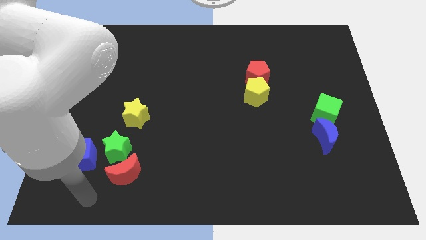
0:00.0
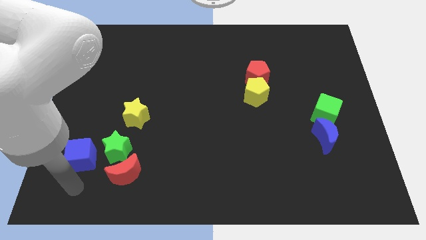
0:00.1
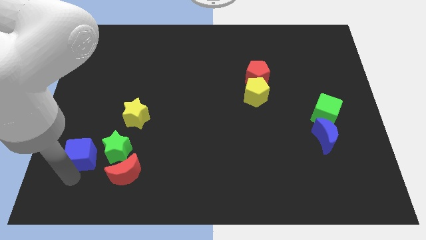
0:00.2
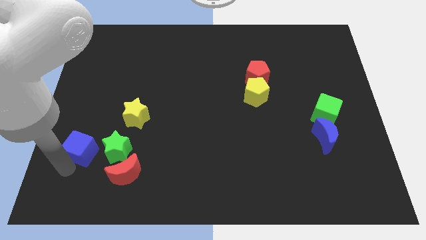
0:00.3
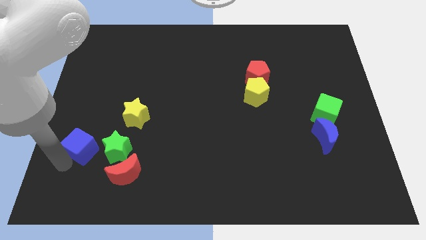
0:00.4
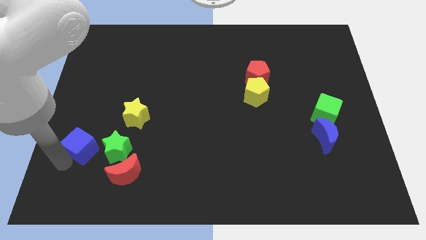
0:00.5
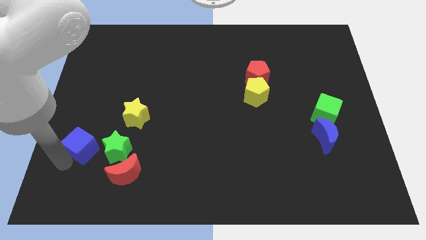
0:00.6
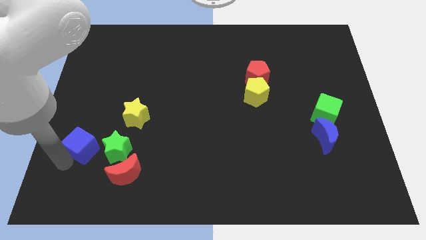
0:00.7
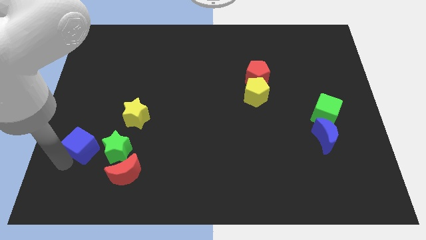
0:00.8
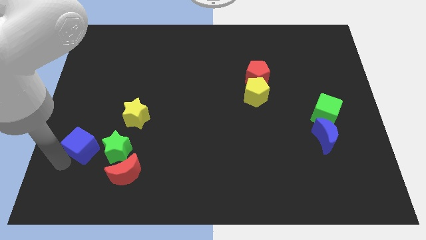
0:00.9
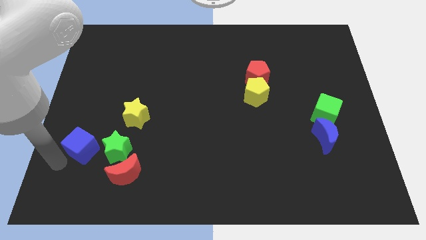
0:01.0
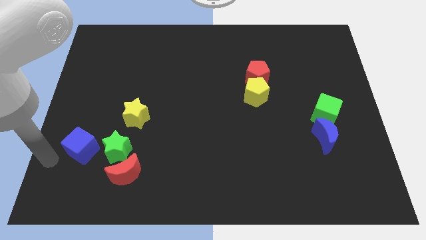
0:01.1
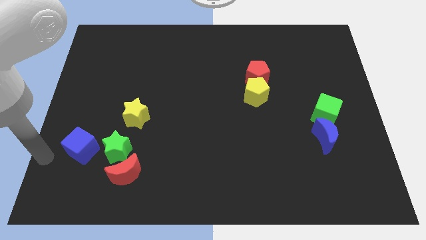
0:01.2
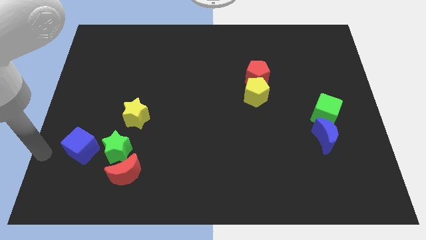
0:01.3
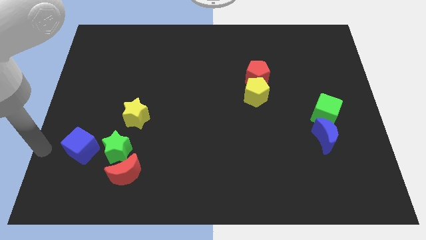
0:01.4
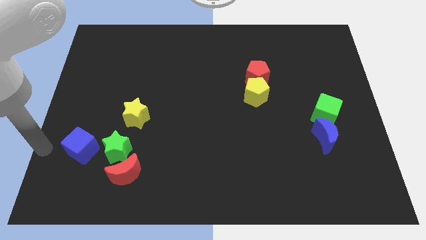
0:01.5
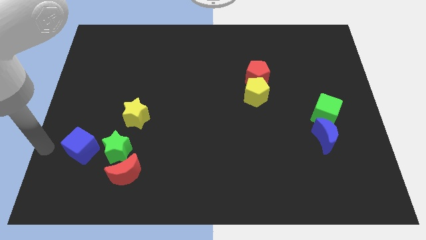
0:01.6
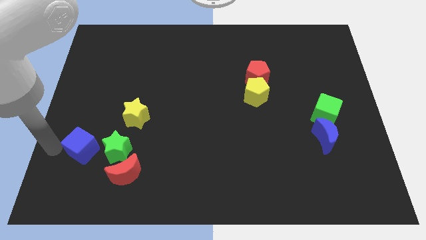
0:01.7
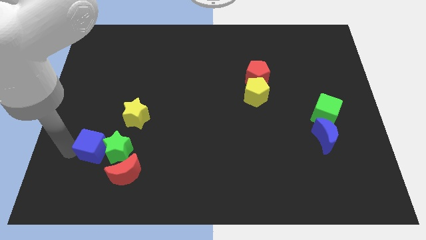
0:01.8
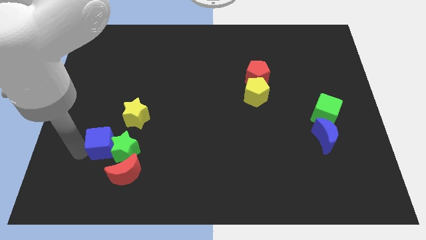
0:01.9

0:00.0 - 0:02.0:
push the blue cube into the green star

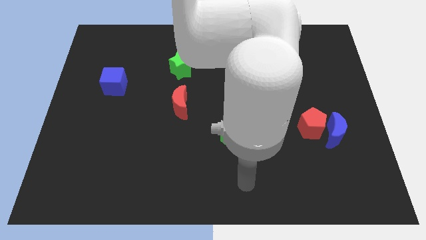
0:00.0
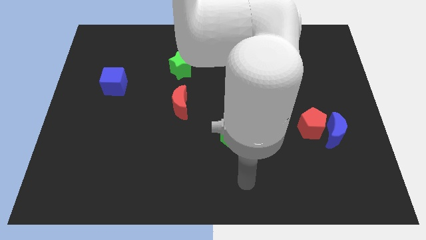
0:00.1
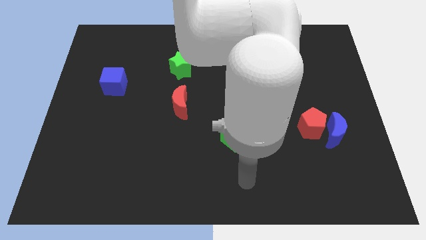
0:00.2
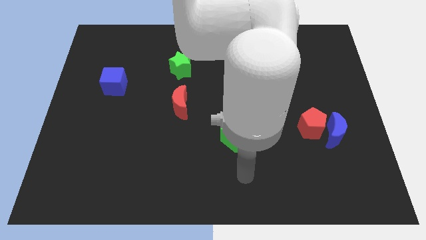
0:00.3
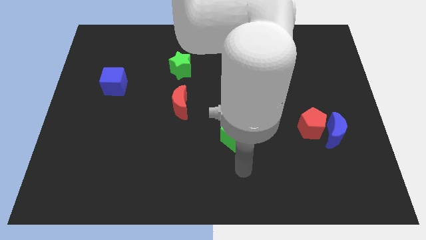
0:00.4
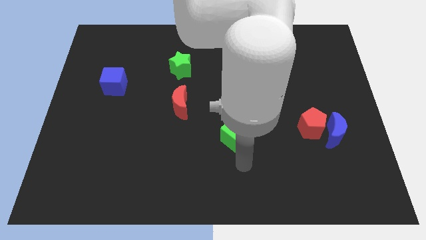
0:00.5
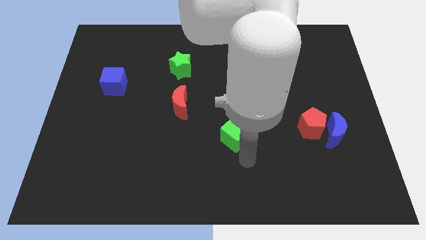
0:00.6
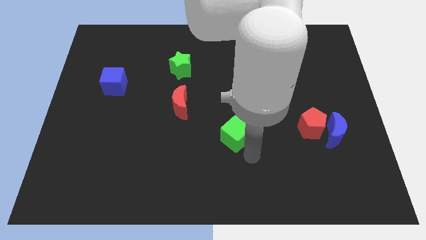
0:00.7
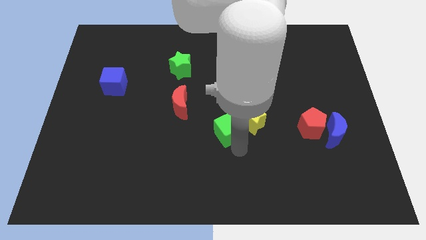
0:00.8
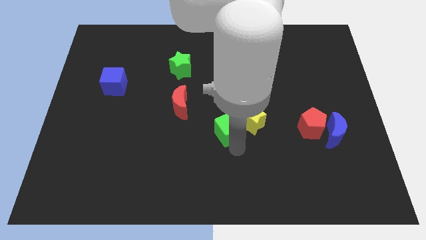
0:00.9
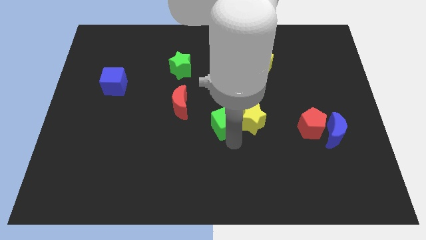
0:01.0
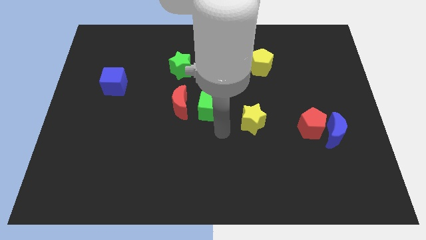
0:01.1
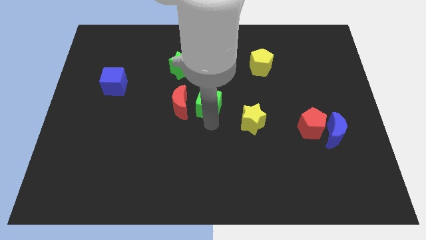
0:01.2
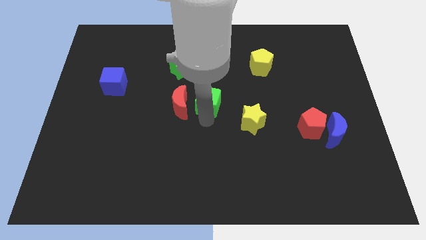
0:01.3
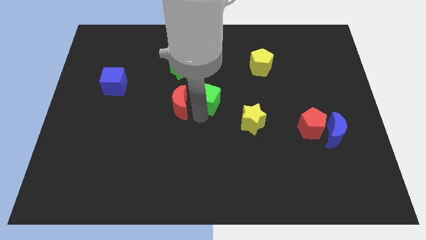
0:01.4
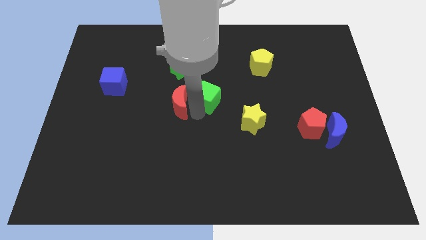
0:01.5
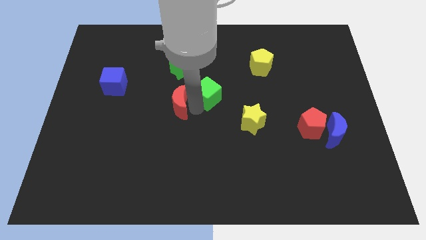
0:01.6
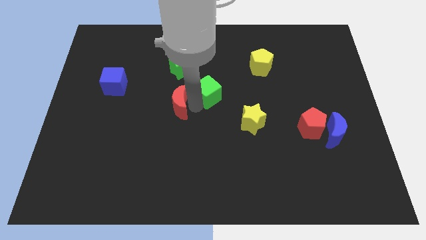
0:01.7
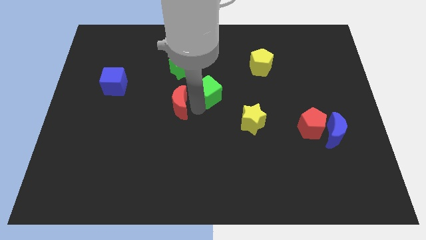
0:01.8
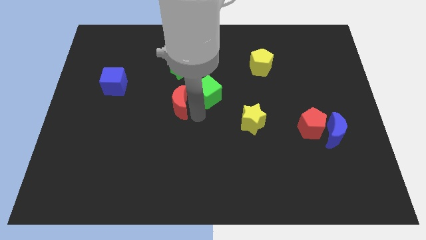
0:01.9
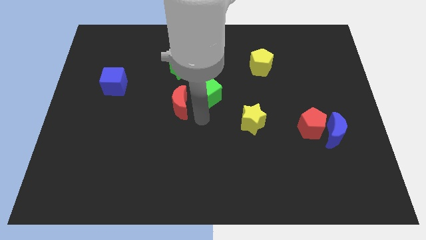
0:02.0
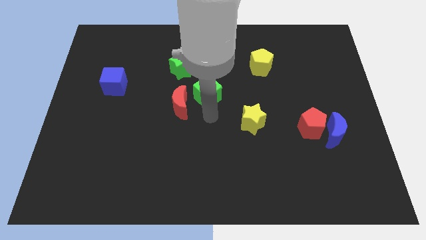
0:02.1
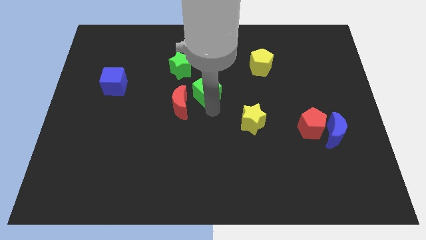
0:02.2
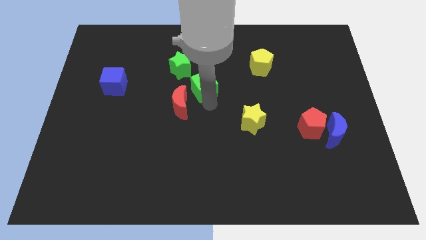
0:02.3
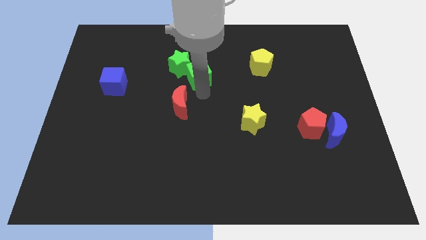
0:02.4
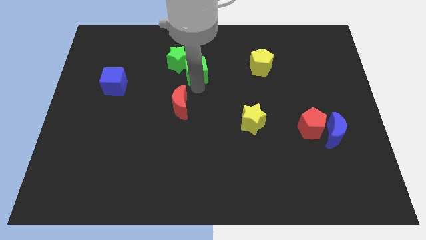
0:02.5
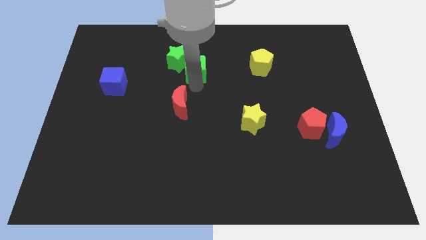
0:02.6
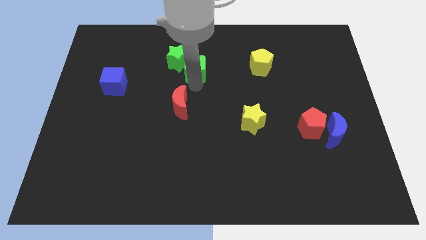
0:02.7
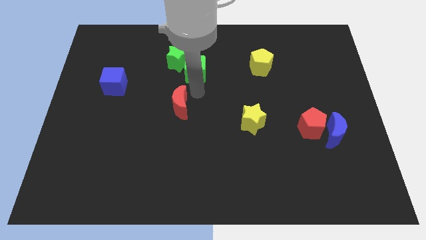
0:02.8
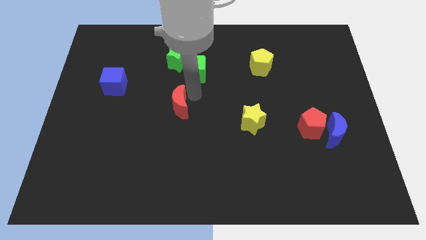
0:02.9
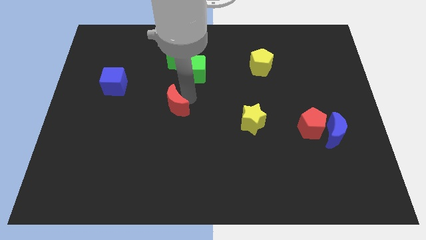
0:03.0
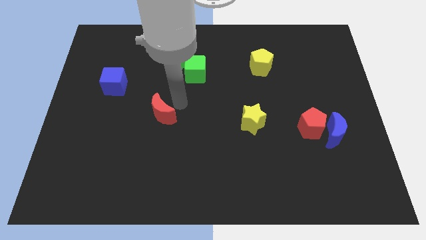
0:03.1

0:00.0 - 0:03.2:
push green cube into green star

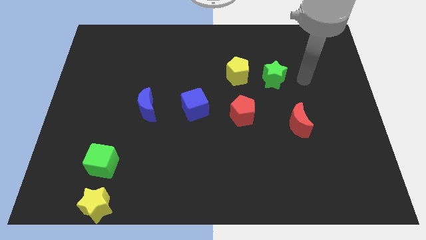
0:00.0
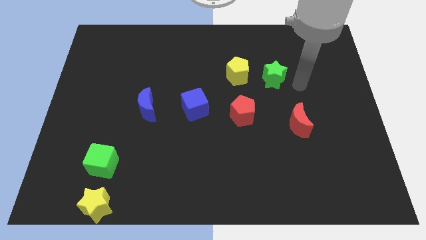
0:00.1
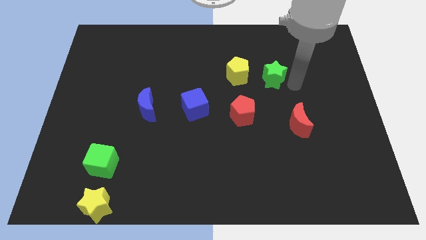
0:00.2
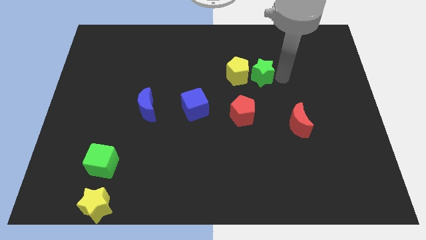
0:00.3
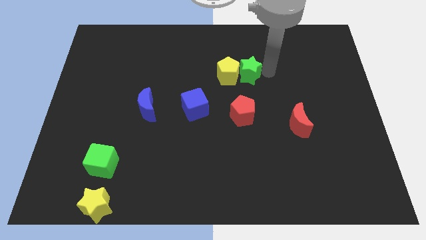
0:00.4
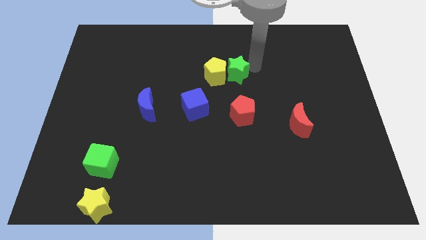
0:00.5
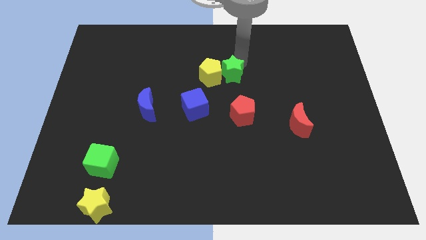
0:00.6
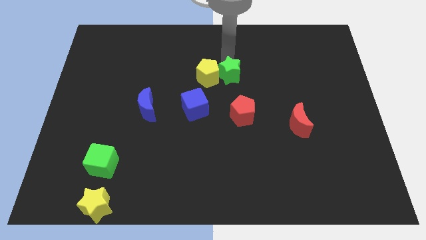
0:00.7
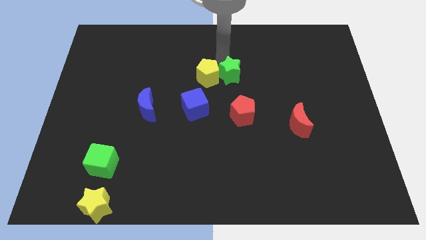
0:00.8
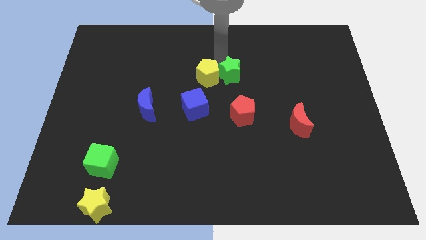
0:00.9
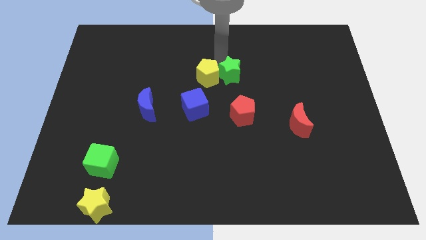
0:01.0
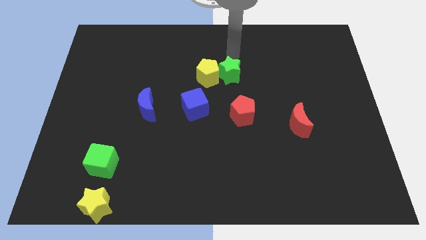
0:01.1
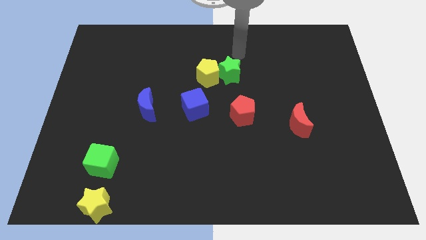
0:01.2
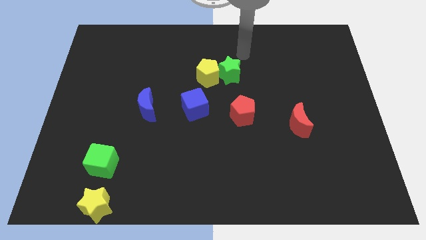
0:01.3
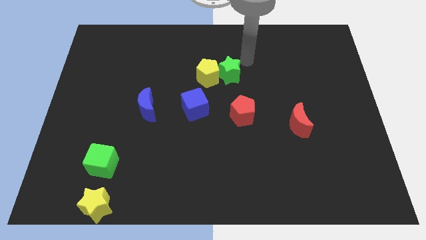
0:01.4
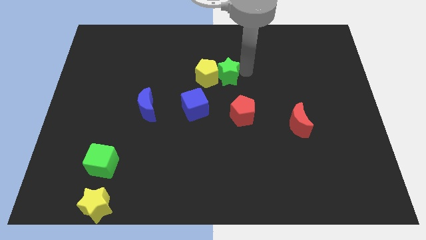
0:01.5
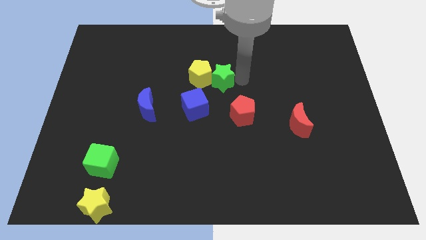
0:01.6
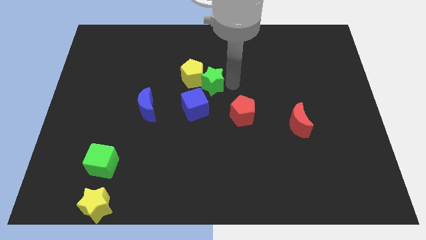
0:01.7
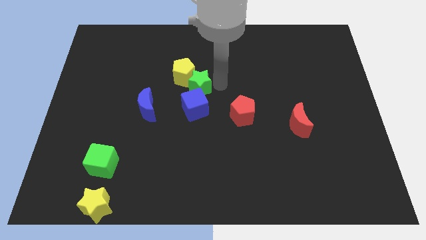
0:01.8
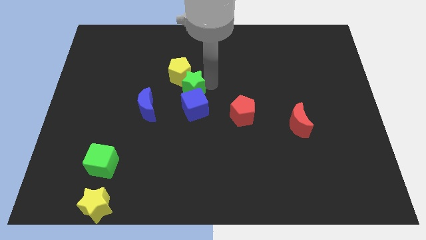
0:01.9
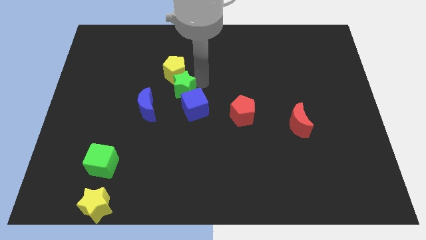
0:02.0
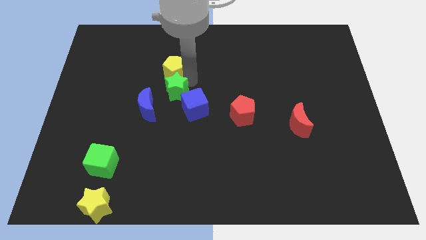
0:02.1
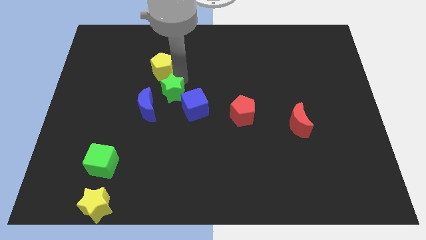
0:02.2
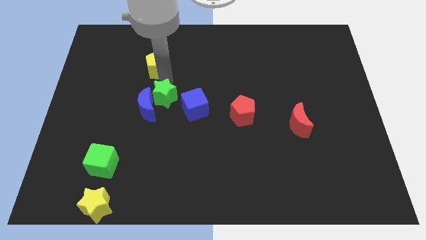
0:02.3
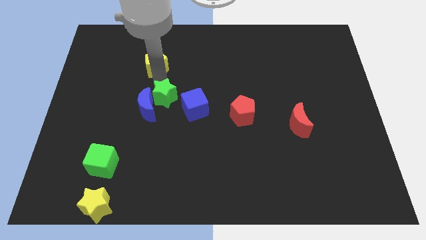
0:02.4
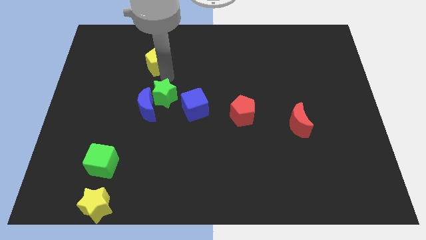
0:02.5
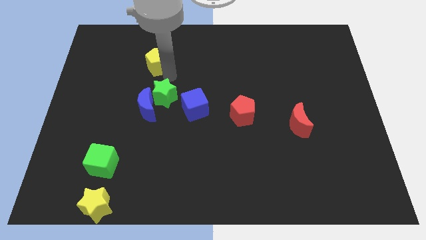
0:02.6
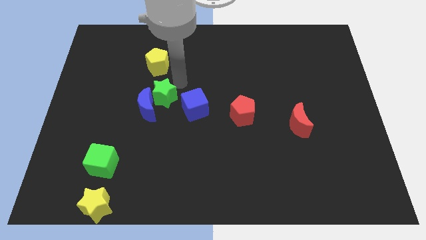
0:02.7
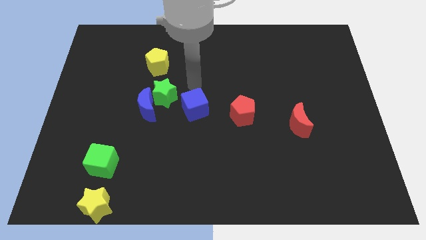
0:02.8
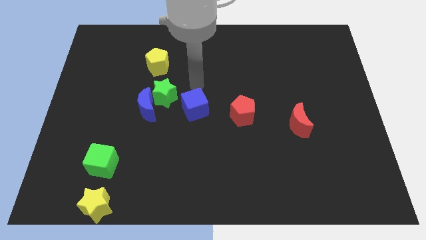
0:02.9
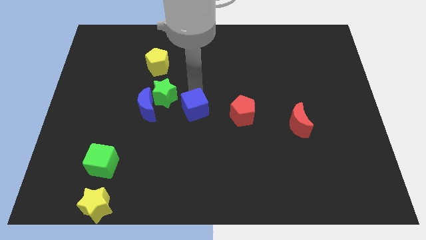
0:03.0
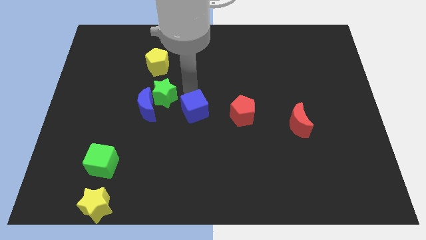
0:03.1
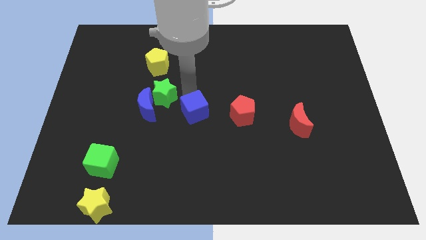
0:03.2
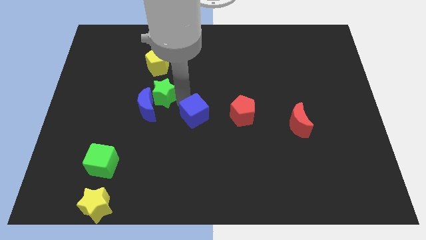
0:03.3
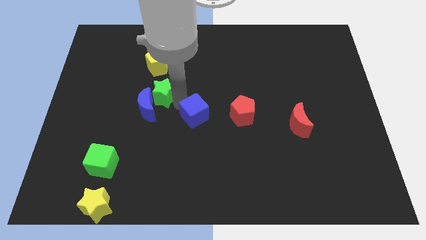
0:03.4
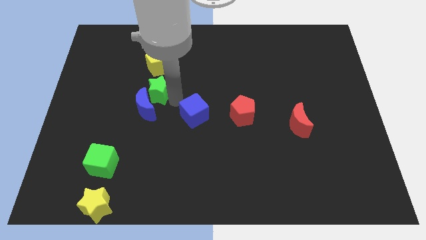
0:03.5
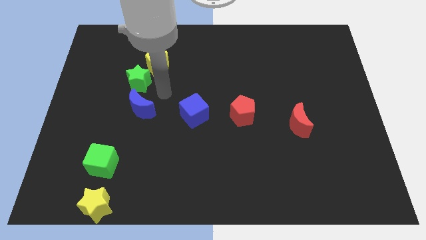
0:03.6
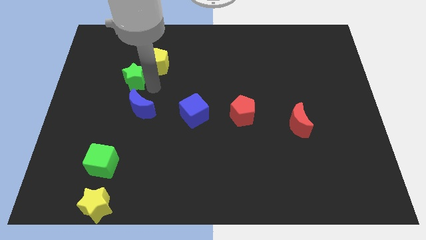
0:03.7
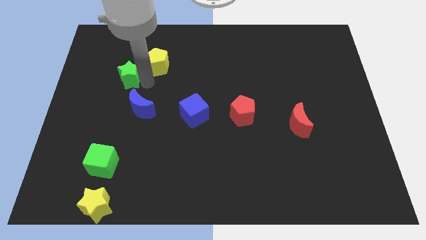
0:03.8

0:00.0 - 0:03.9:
push the green star and the yellow pentagon to the left
